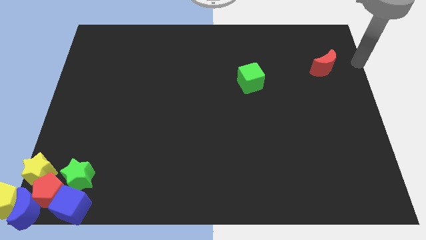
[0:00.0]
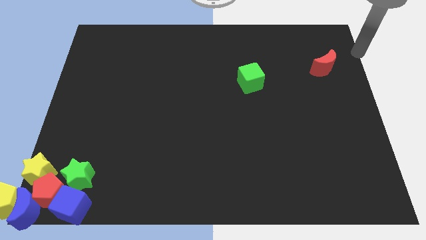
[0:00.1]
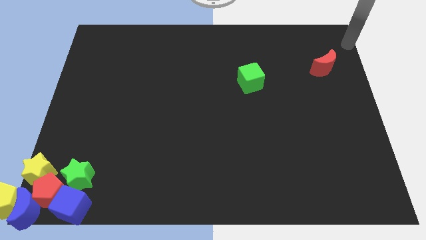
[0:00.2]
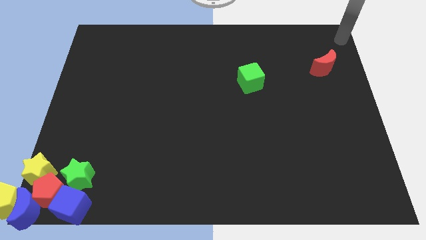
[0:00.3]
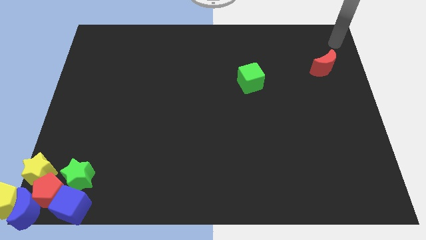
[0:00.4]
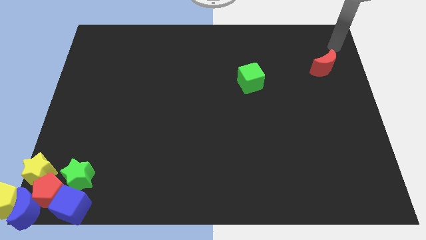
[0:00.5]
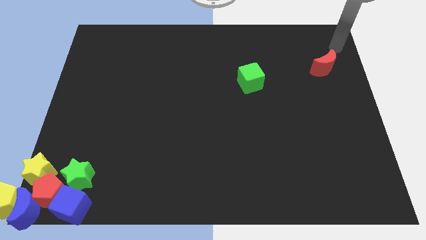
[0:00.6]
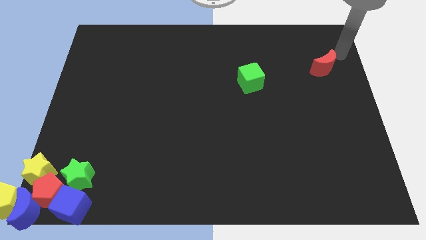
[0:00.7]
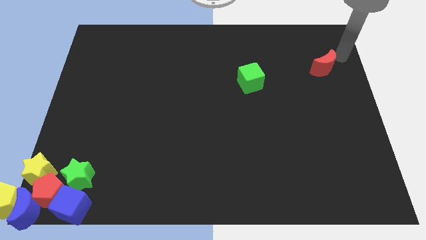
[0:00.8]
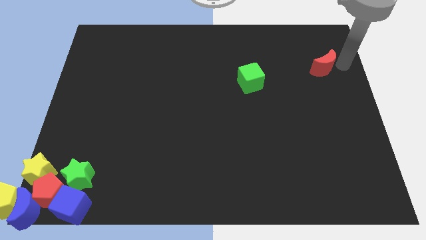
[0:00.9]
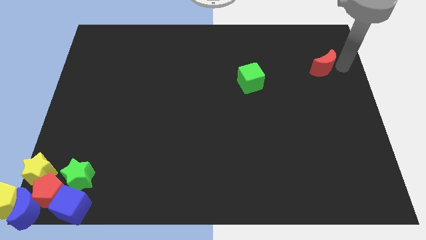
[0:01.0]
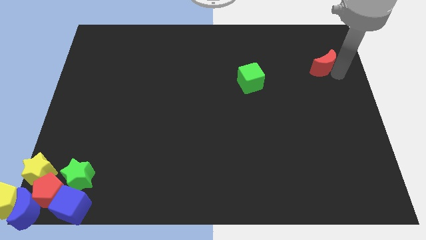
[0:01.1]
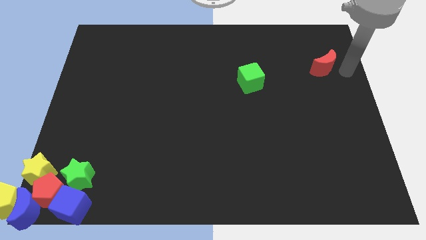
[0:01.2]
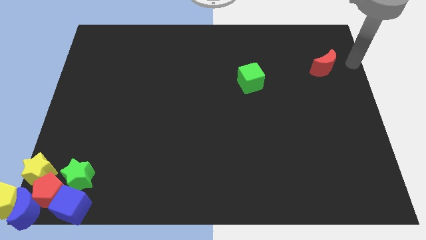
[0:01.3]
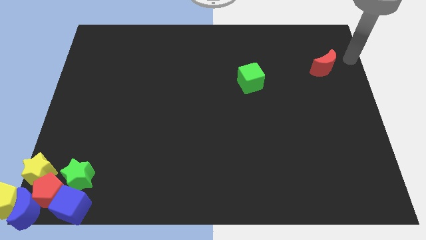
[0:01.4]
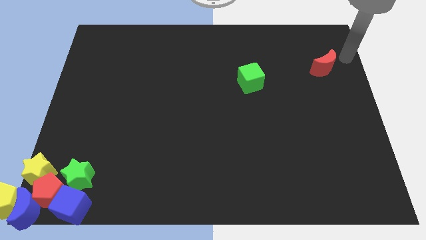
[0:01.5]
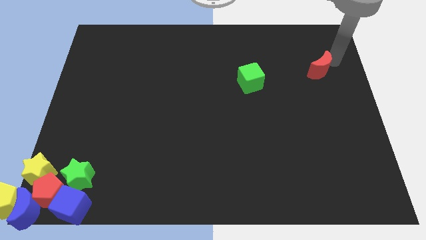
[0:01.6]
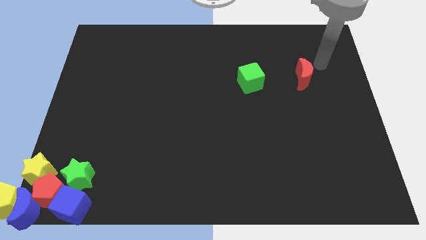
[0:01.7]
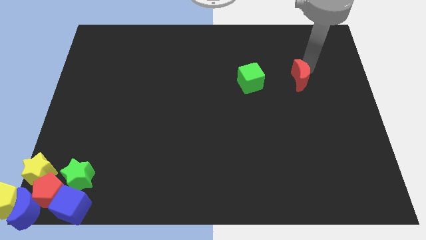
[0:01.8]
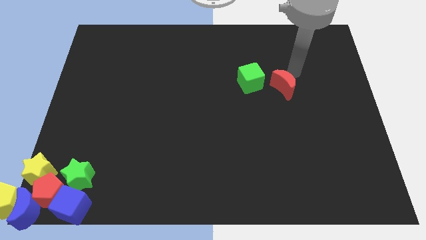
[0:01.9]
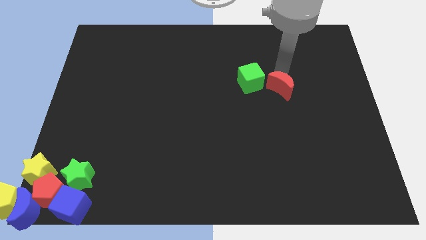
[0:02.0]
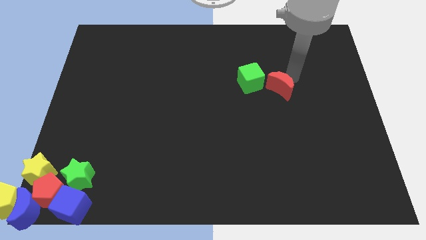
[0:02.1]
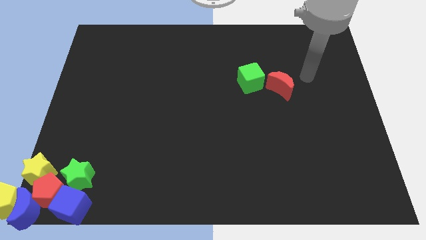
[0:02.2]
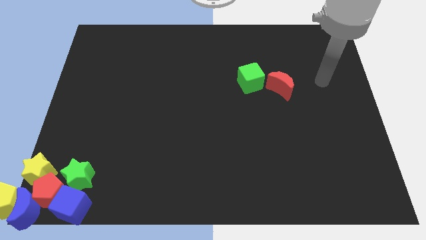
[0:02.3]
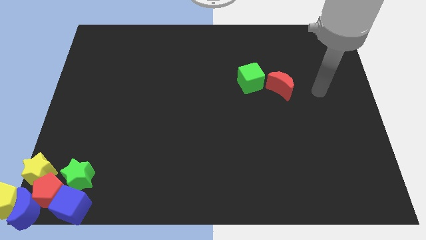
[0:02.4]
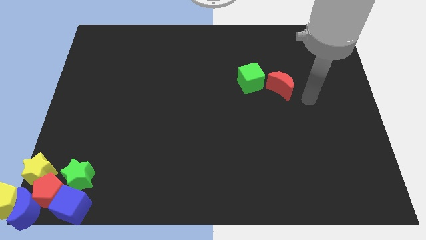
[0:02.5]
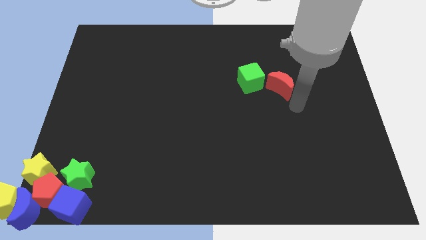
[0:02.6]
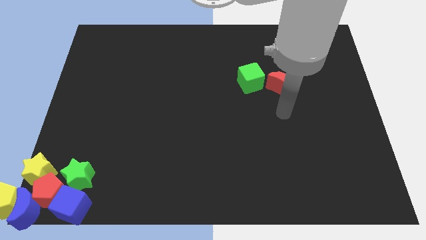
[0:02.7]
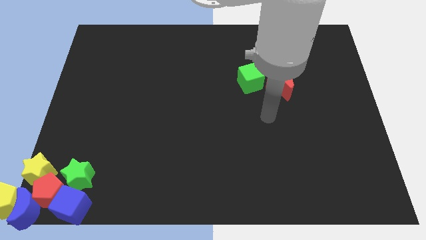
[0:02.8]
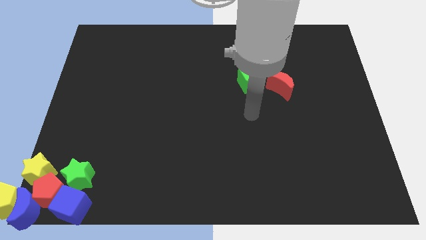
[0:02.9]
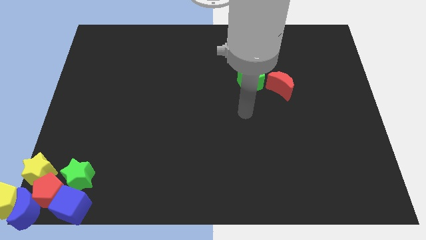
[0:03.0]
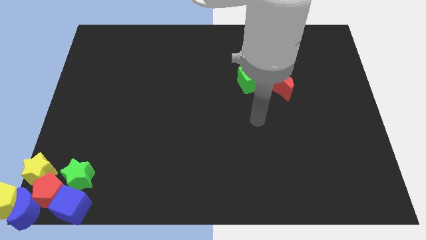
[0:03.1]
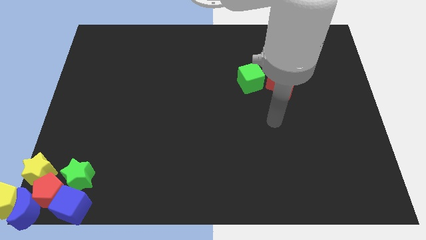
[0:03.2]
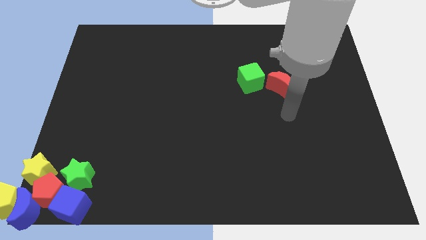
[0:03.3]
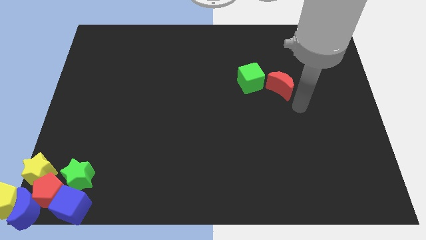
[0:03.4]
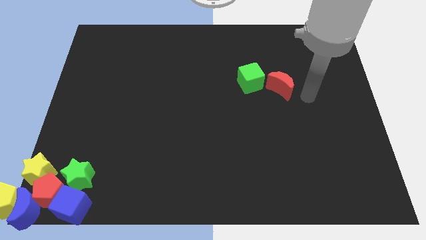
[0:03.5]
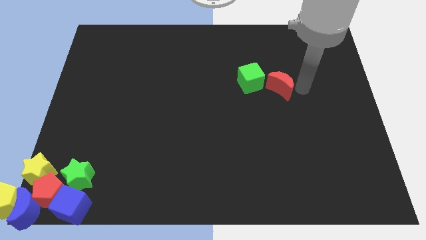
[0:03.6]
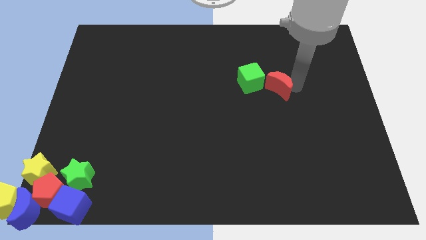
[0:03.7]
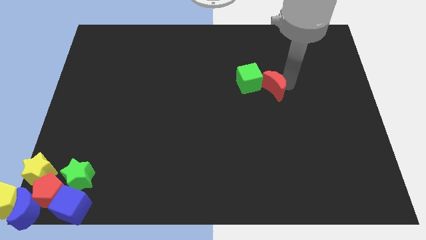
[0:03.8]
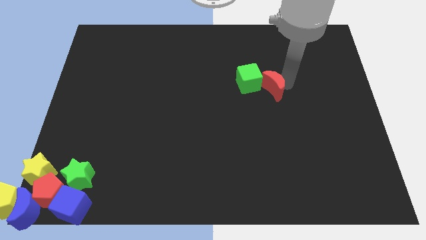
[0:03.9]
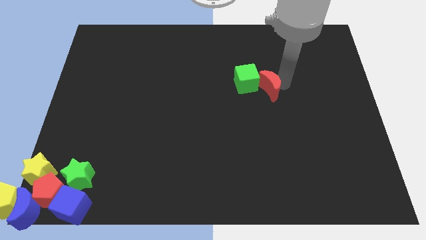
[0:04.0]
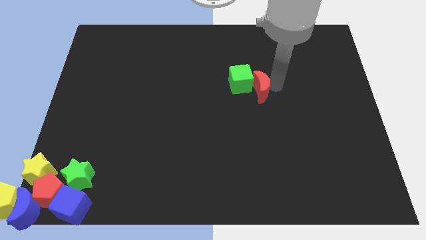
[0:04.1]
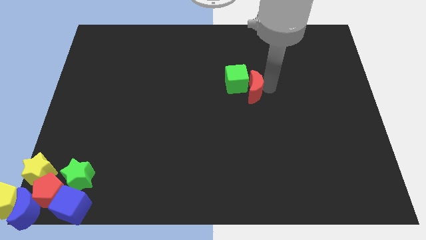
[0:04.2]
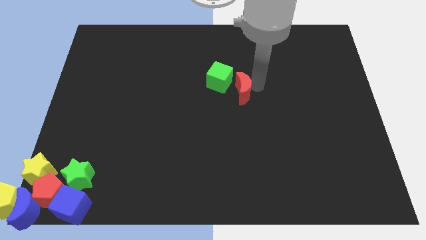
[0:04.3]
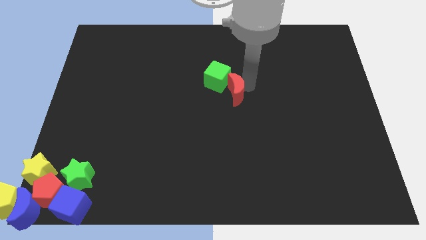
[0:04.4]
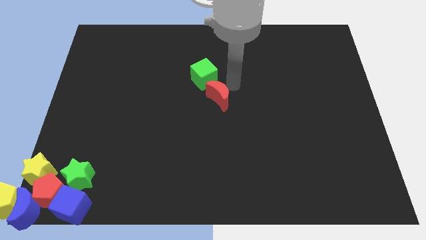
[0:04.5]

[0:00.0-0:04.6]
move the red crescent below to the green cube

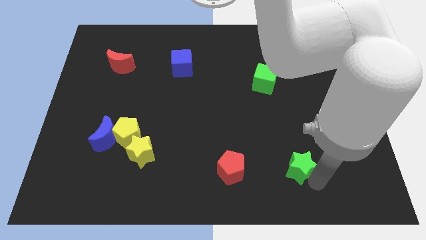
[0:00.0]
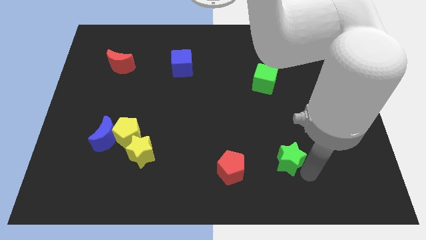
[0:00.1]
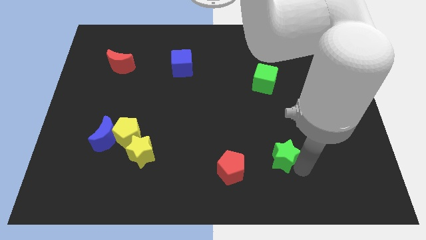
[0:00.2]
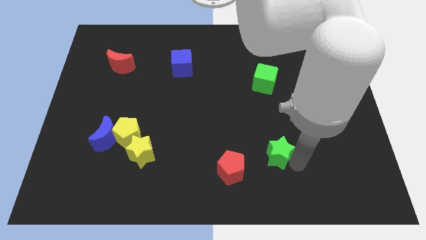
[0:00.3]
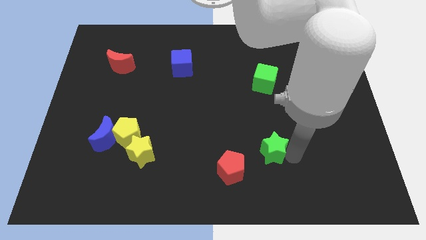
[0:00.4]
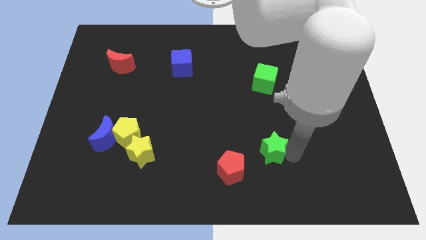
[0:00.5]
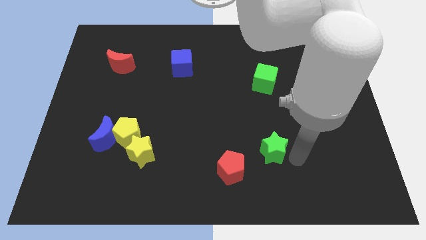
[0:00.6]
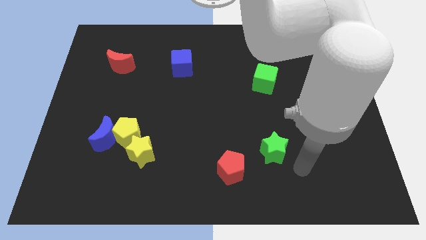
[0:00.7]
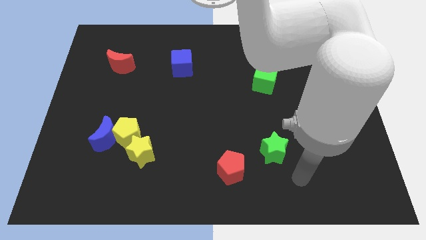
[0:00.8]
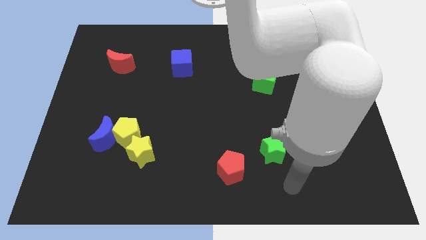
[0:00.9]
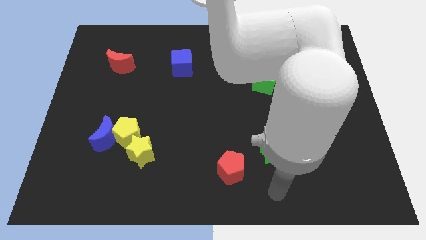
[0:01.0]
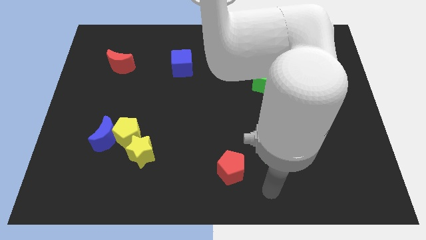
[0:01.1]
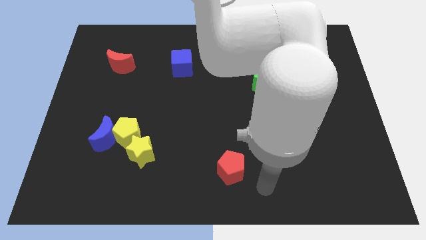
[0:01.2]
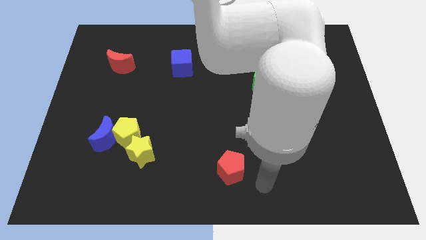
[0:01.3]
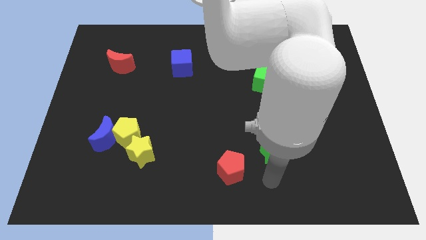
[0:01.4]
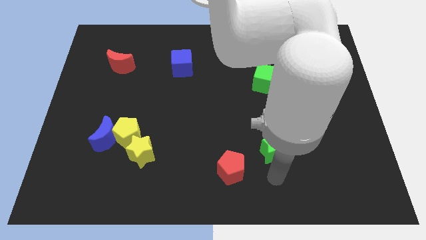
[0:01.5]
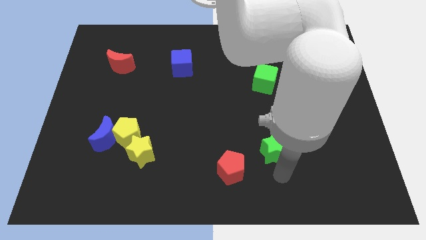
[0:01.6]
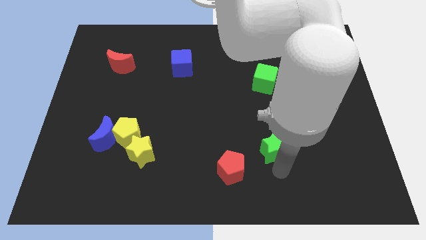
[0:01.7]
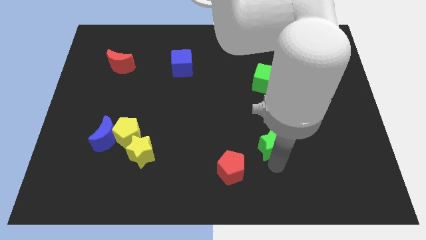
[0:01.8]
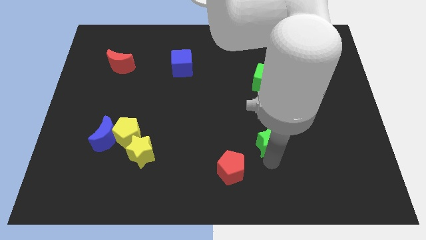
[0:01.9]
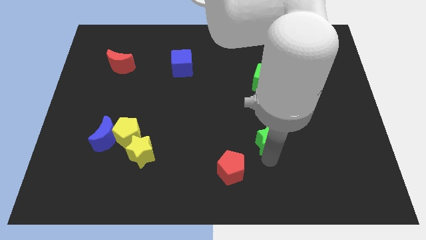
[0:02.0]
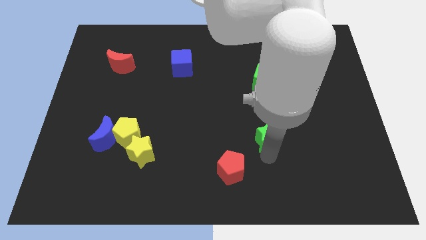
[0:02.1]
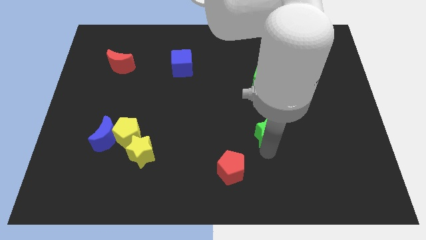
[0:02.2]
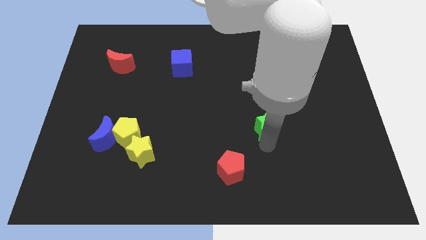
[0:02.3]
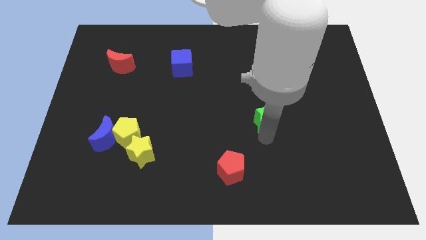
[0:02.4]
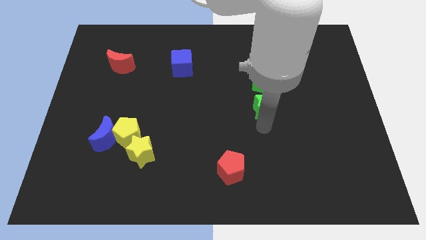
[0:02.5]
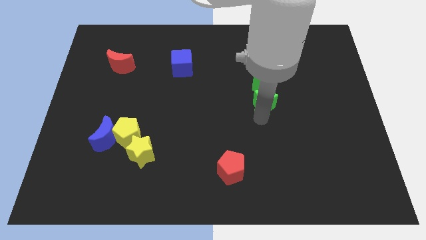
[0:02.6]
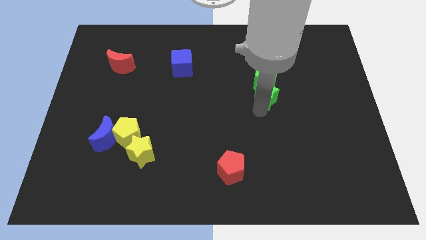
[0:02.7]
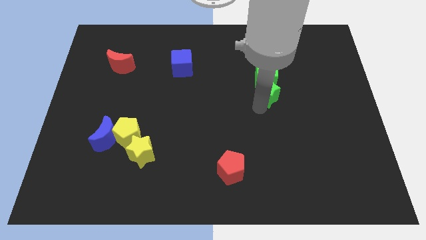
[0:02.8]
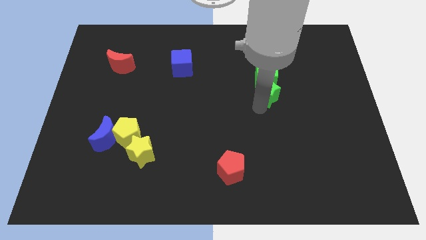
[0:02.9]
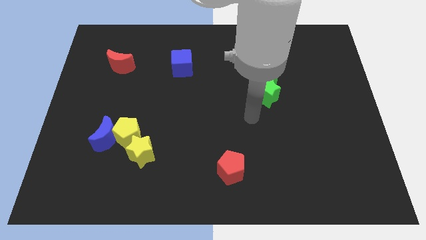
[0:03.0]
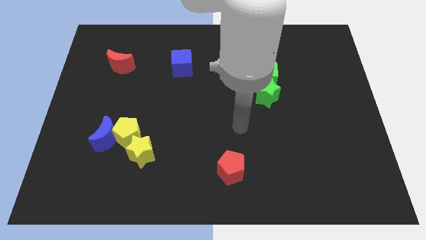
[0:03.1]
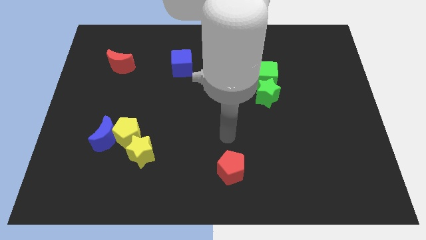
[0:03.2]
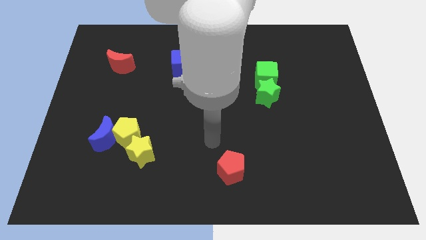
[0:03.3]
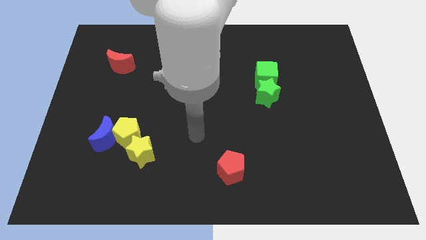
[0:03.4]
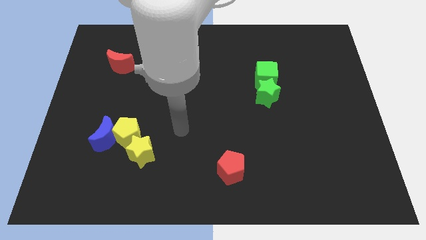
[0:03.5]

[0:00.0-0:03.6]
push the green blocks towards the top side of the board

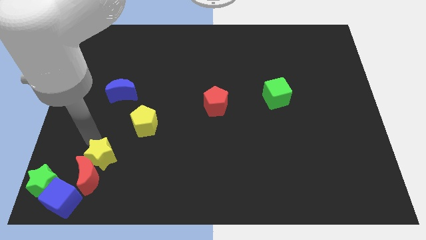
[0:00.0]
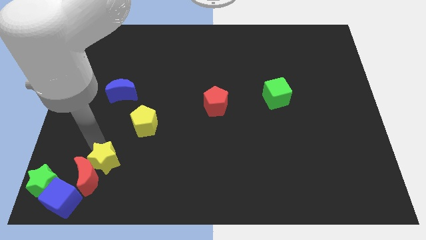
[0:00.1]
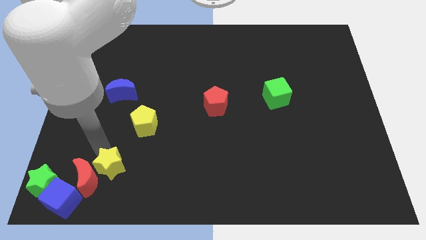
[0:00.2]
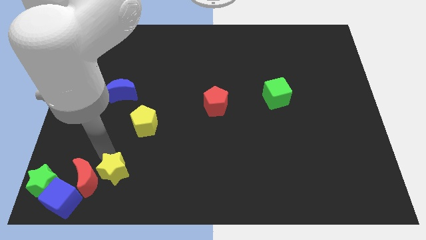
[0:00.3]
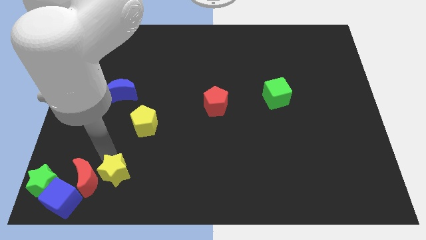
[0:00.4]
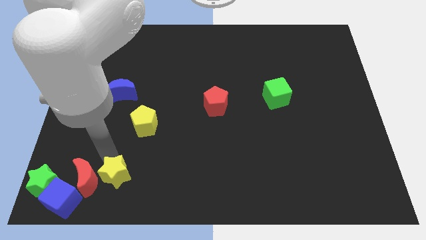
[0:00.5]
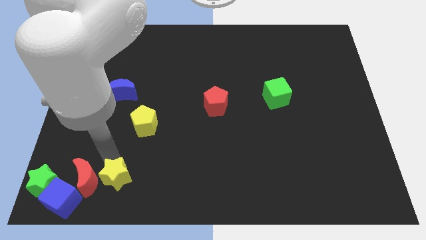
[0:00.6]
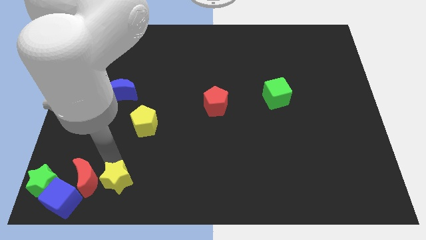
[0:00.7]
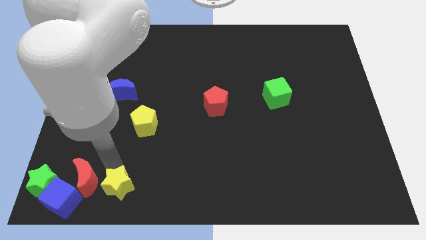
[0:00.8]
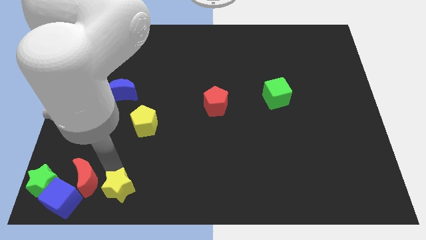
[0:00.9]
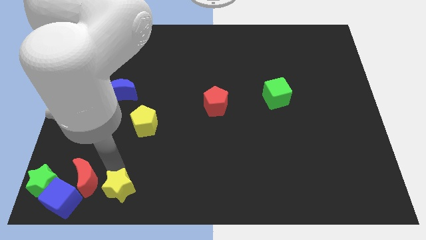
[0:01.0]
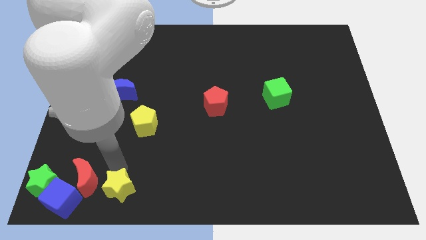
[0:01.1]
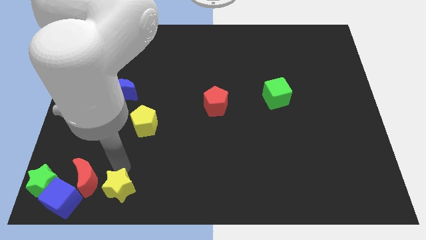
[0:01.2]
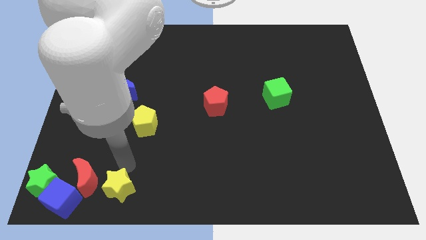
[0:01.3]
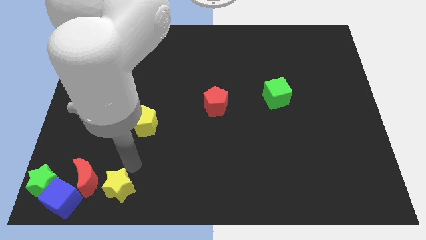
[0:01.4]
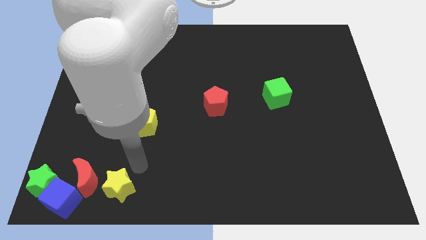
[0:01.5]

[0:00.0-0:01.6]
move yellow star right beside red moon
